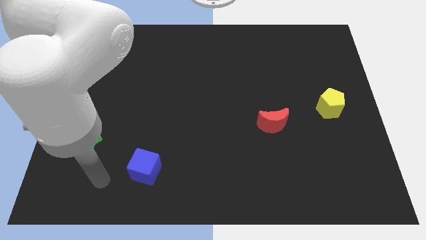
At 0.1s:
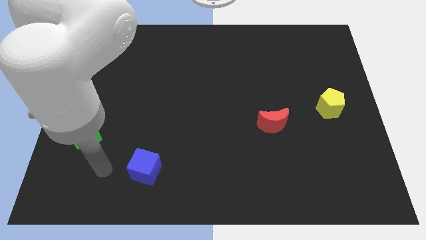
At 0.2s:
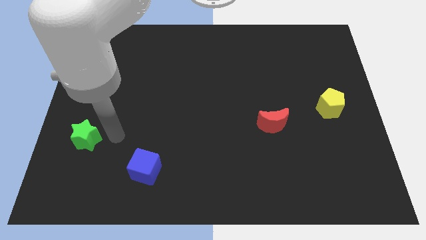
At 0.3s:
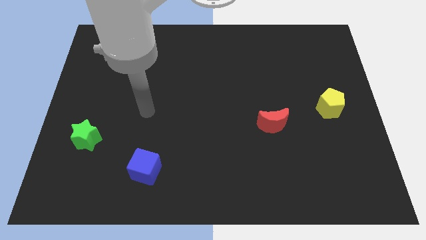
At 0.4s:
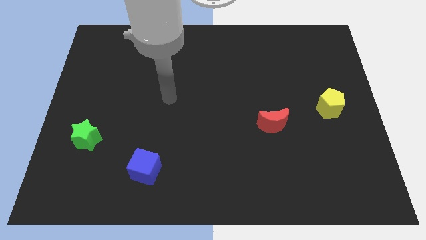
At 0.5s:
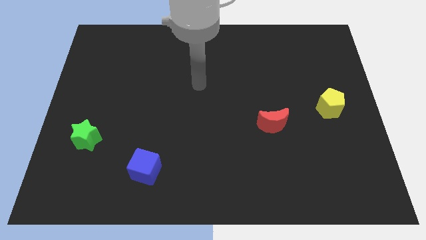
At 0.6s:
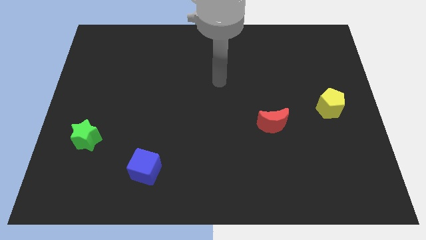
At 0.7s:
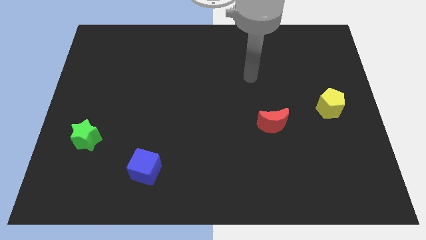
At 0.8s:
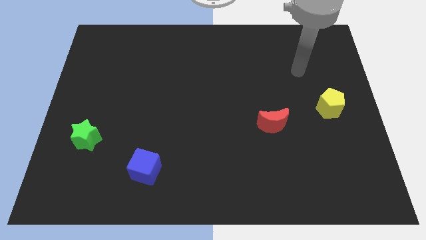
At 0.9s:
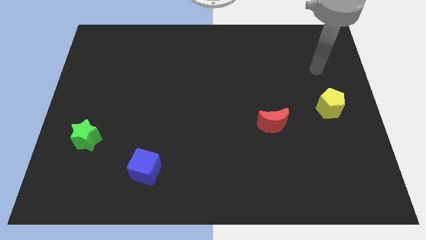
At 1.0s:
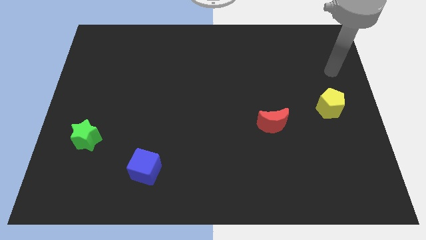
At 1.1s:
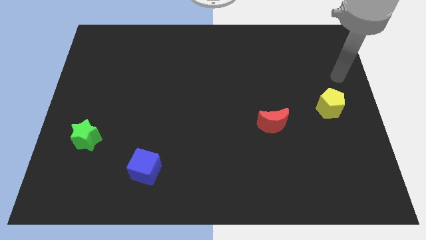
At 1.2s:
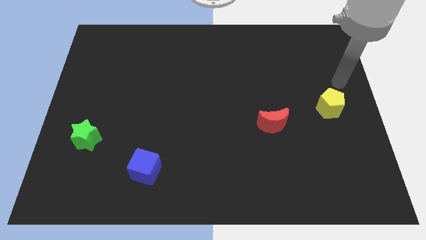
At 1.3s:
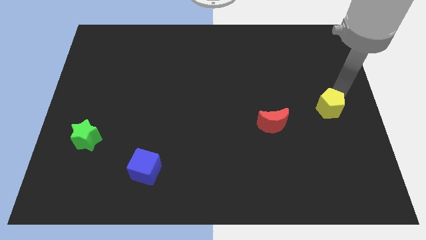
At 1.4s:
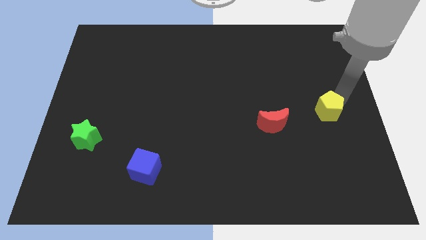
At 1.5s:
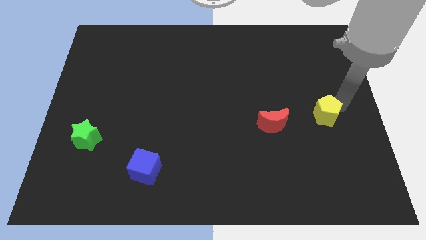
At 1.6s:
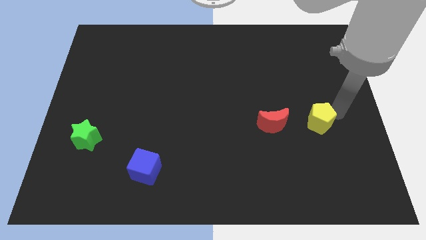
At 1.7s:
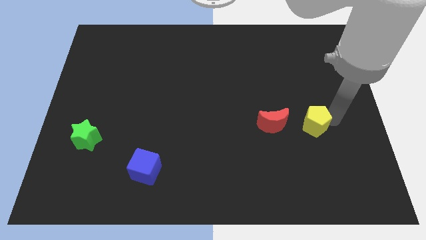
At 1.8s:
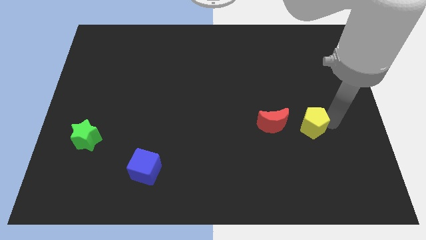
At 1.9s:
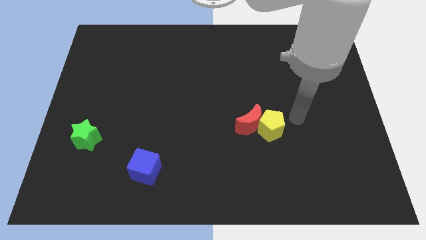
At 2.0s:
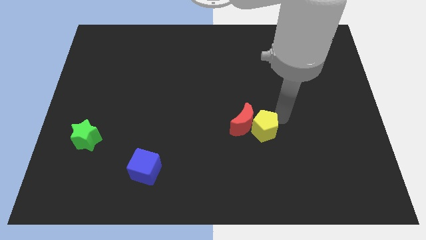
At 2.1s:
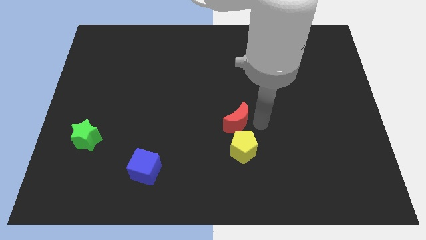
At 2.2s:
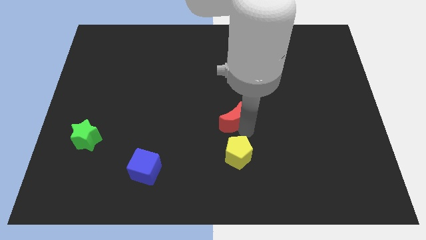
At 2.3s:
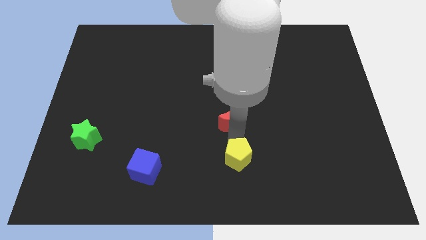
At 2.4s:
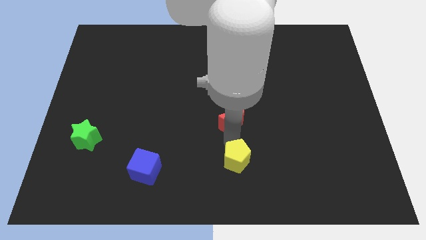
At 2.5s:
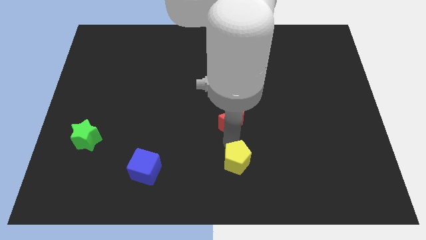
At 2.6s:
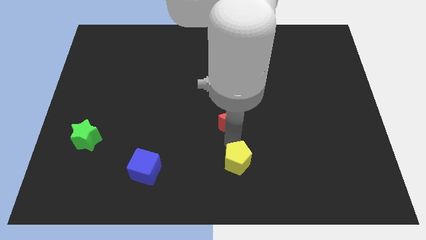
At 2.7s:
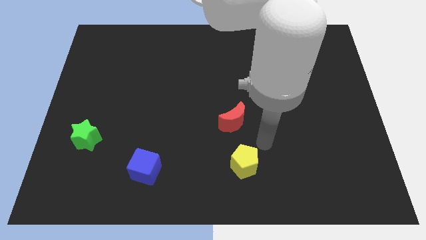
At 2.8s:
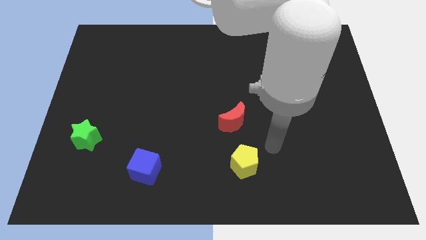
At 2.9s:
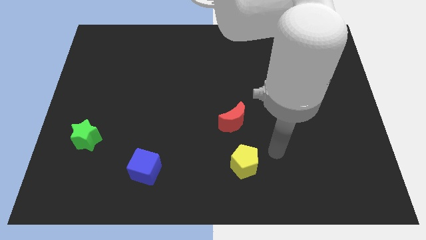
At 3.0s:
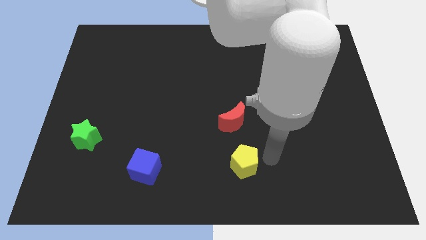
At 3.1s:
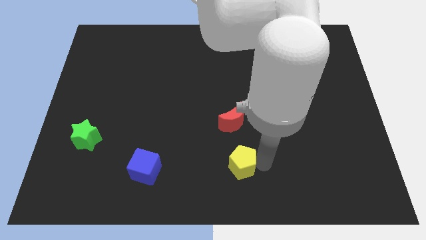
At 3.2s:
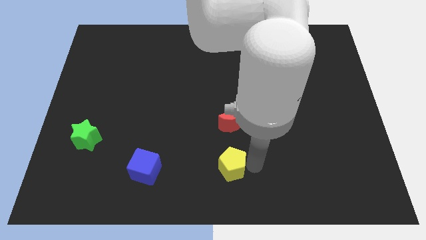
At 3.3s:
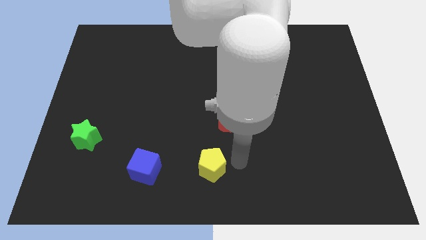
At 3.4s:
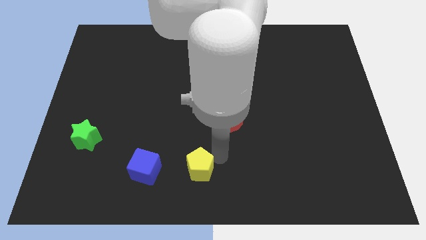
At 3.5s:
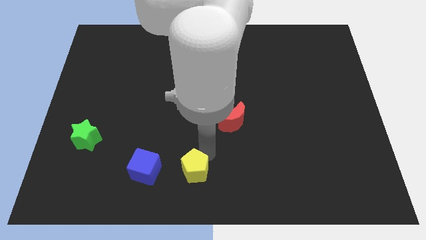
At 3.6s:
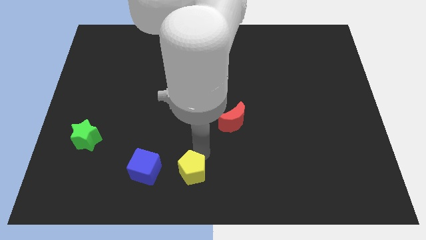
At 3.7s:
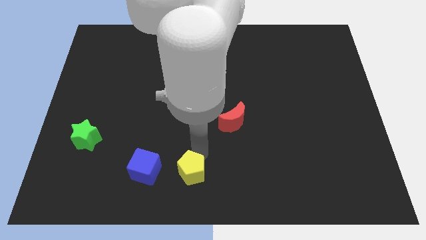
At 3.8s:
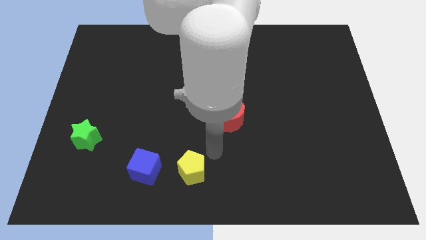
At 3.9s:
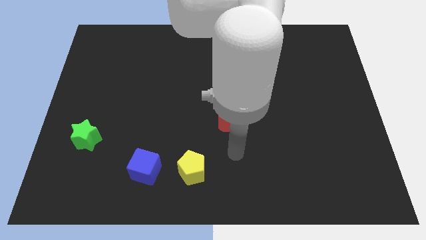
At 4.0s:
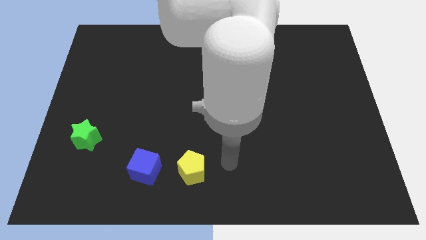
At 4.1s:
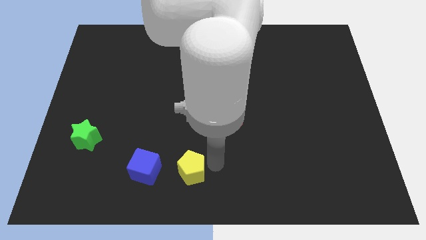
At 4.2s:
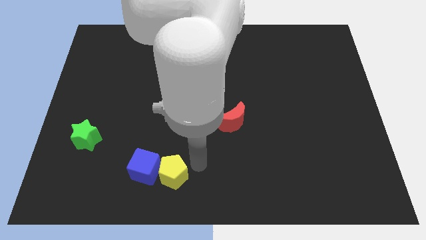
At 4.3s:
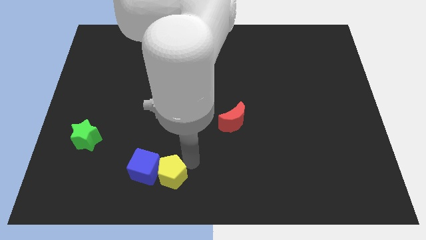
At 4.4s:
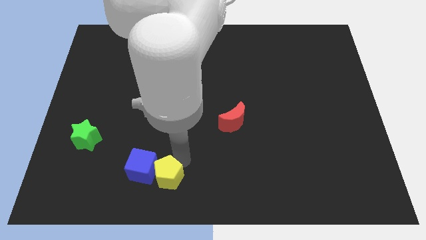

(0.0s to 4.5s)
move the yellow block towards the cube

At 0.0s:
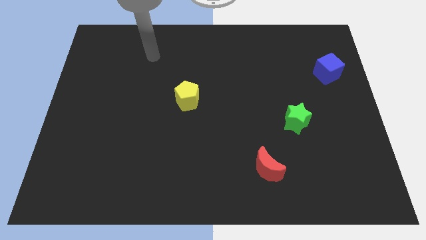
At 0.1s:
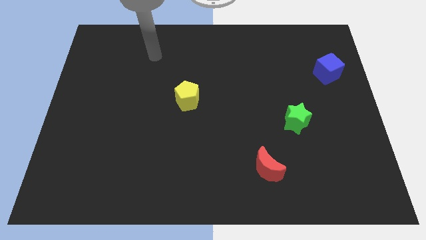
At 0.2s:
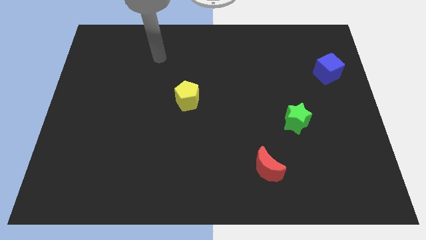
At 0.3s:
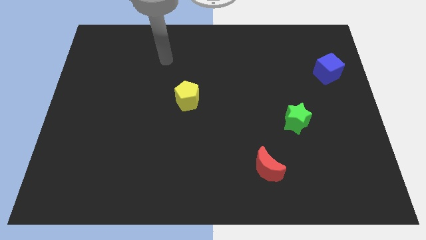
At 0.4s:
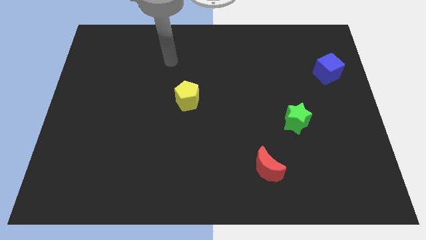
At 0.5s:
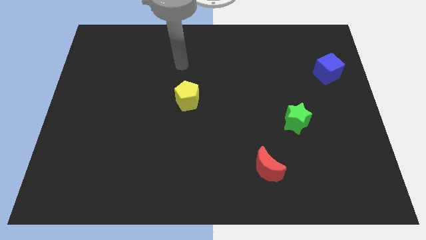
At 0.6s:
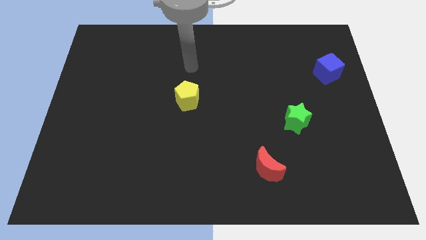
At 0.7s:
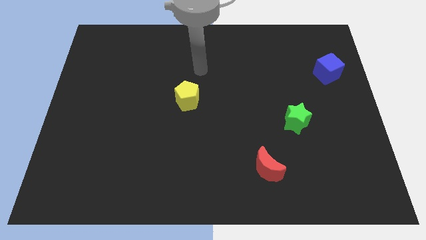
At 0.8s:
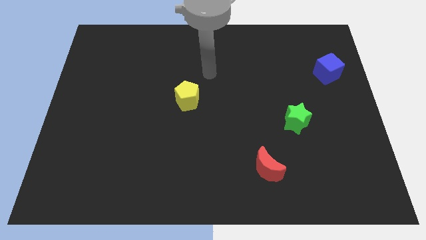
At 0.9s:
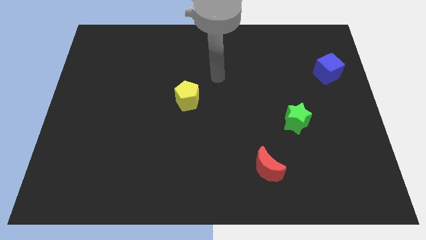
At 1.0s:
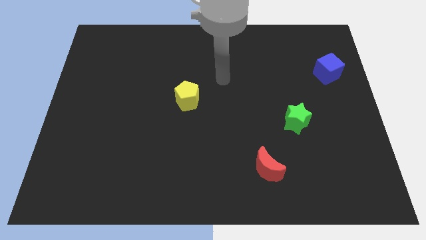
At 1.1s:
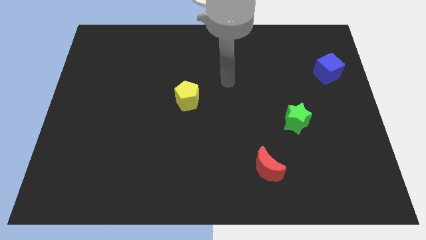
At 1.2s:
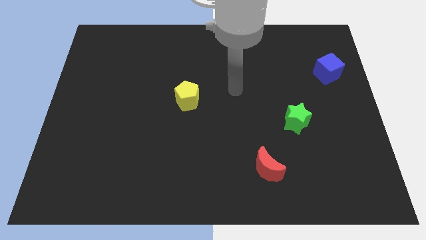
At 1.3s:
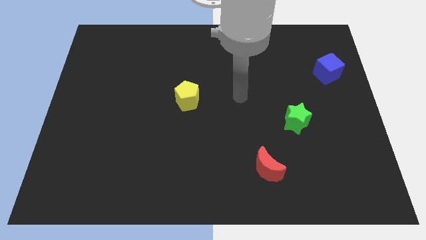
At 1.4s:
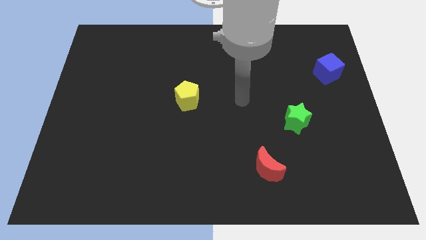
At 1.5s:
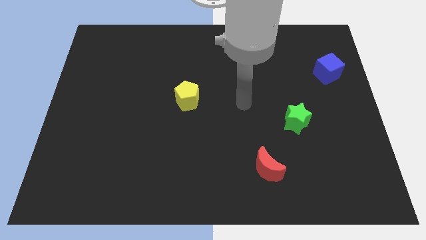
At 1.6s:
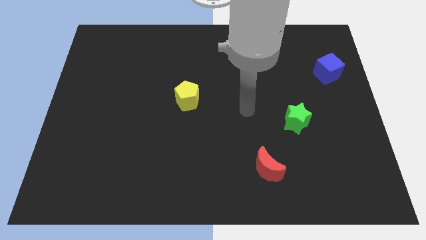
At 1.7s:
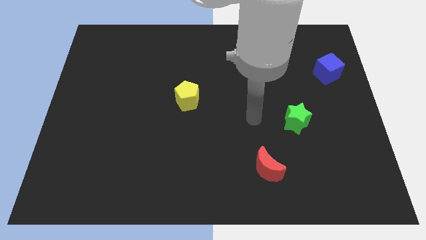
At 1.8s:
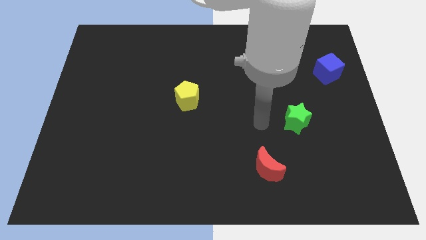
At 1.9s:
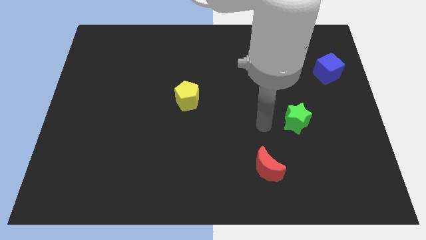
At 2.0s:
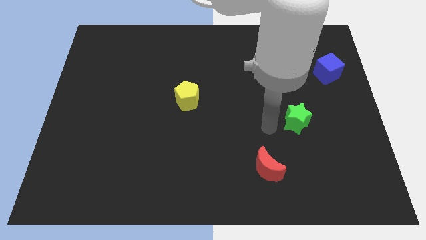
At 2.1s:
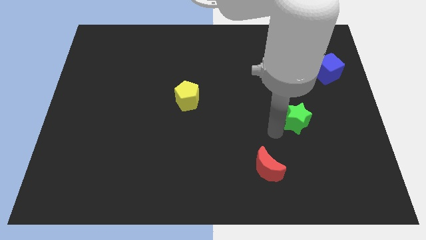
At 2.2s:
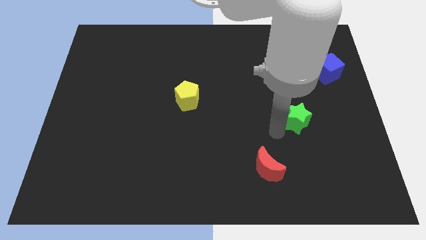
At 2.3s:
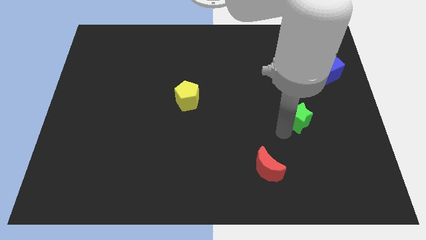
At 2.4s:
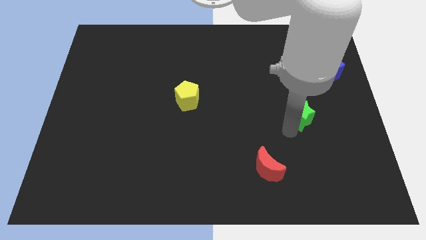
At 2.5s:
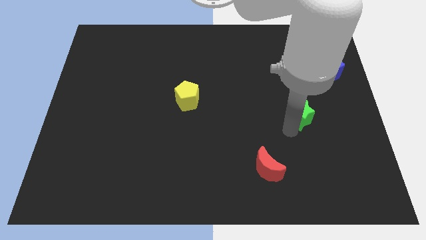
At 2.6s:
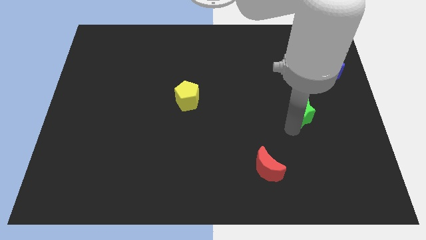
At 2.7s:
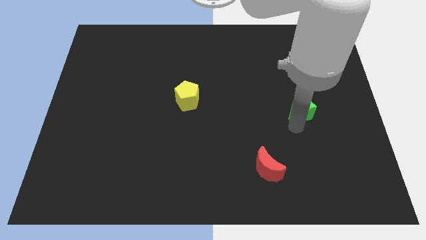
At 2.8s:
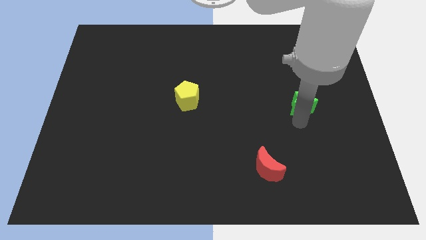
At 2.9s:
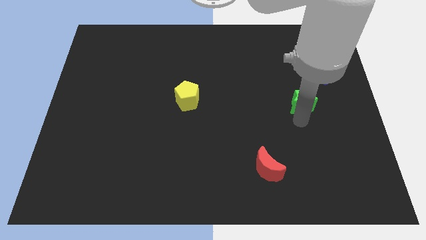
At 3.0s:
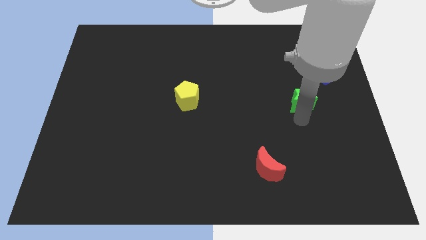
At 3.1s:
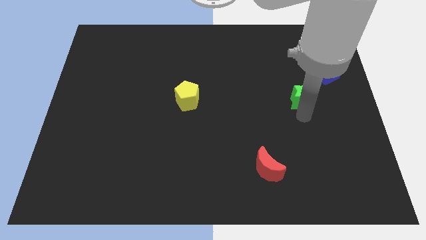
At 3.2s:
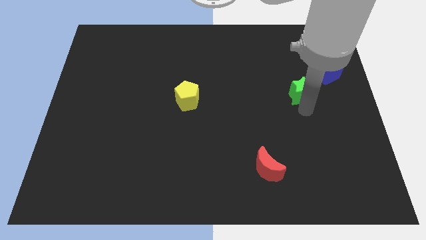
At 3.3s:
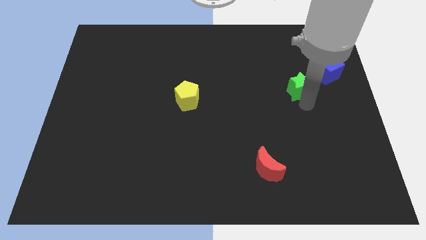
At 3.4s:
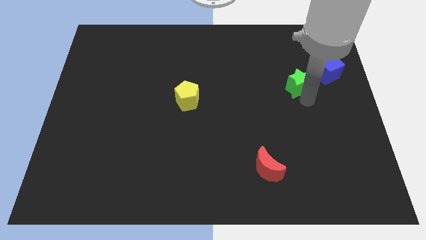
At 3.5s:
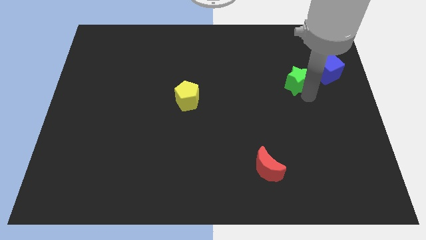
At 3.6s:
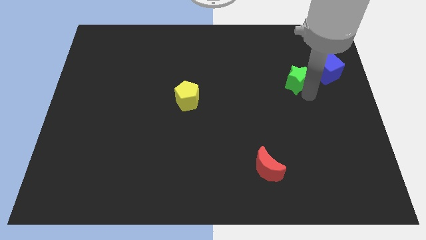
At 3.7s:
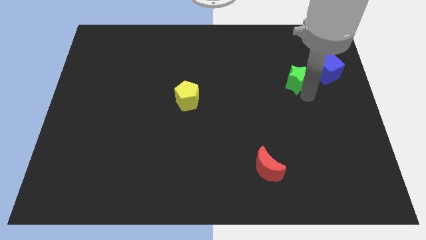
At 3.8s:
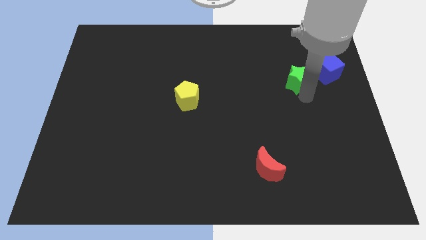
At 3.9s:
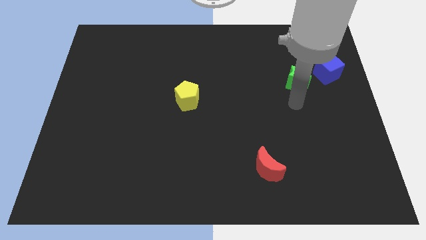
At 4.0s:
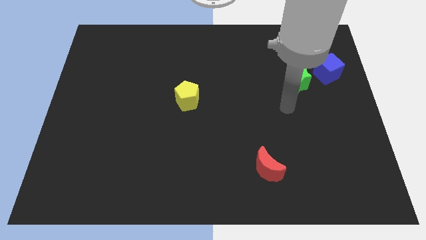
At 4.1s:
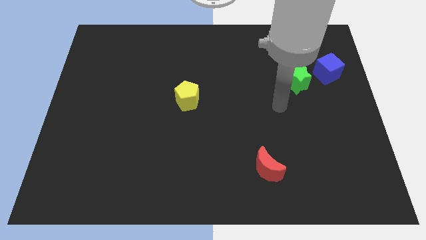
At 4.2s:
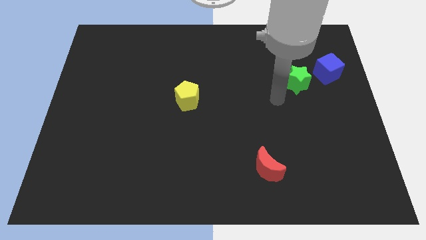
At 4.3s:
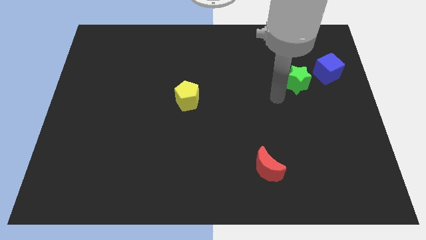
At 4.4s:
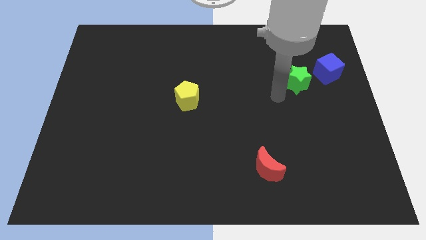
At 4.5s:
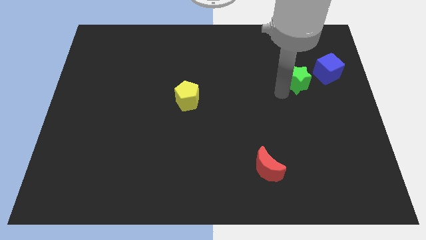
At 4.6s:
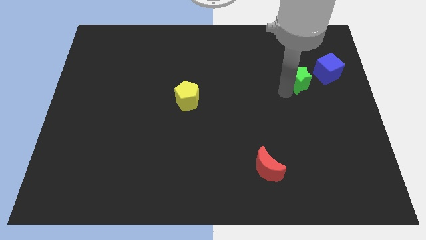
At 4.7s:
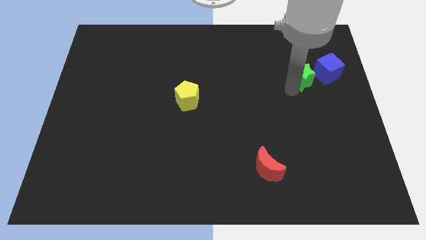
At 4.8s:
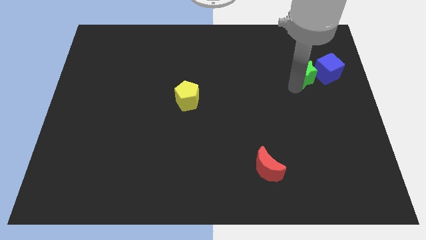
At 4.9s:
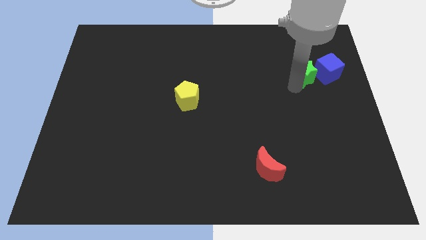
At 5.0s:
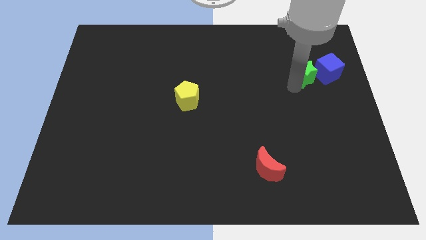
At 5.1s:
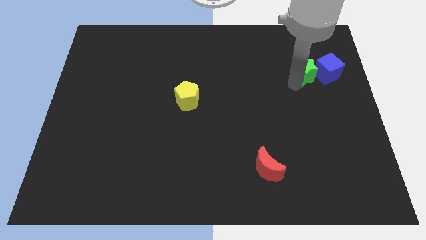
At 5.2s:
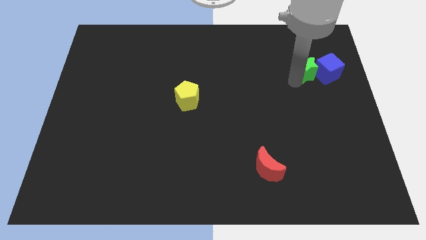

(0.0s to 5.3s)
put the green star close to the blue cube
